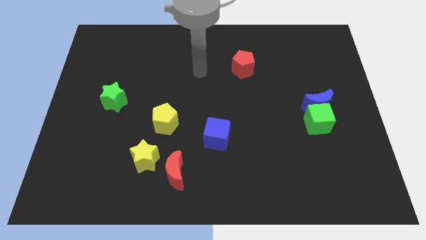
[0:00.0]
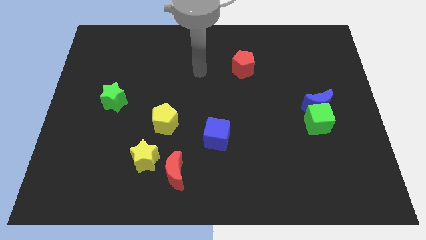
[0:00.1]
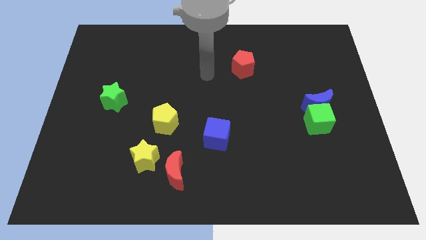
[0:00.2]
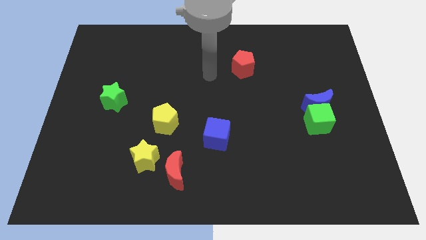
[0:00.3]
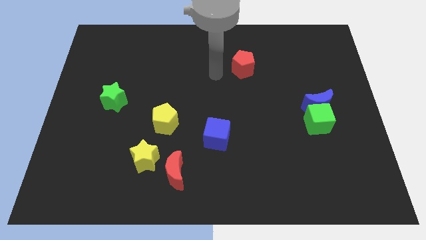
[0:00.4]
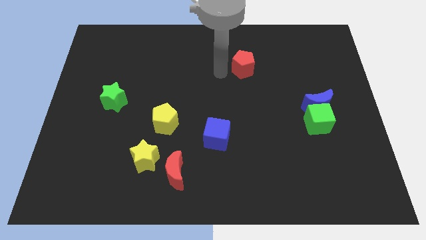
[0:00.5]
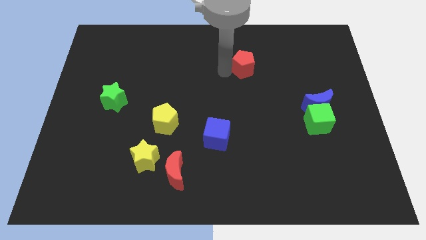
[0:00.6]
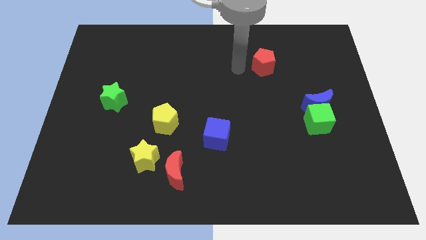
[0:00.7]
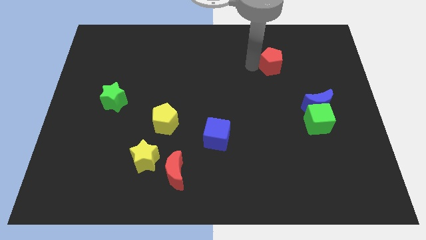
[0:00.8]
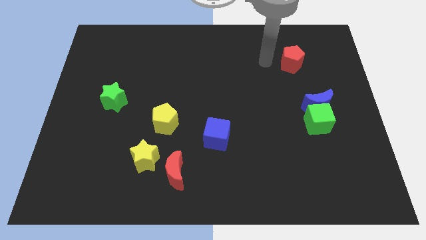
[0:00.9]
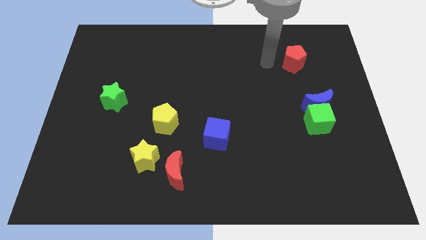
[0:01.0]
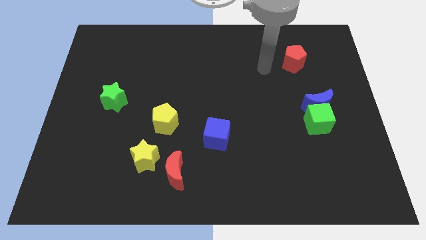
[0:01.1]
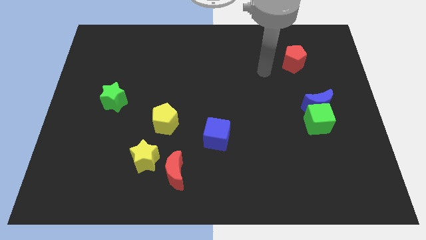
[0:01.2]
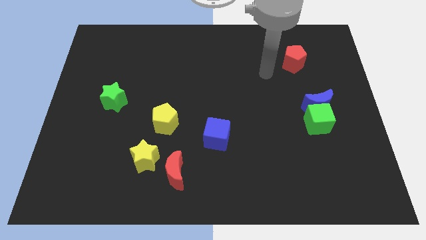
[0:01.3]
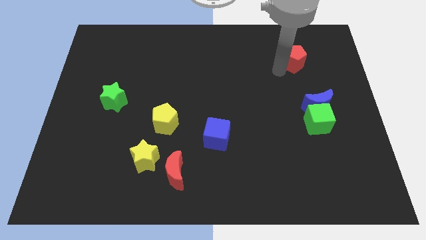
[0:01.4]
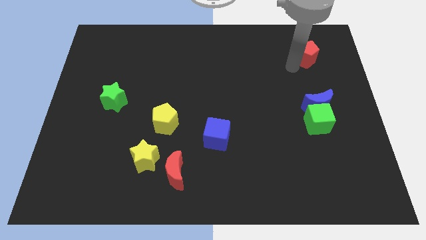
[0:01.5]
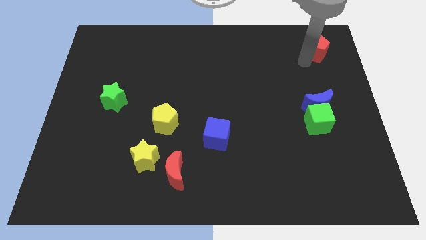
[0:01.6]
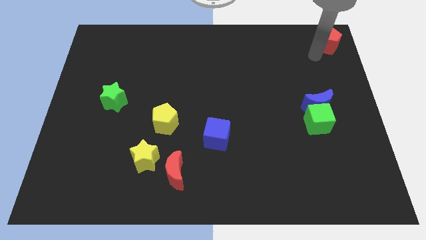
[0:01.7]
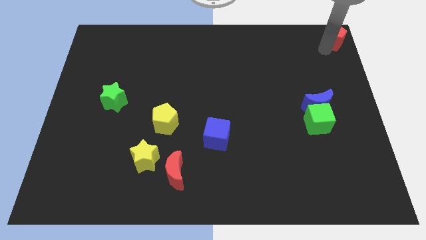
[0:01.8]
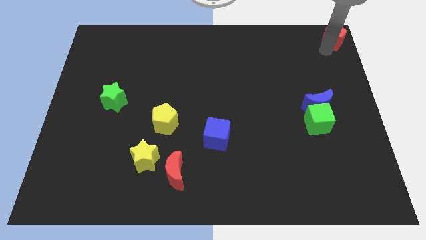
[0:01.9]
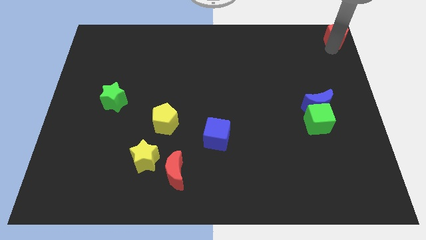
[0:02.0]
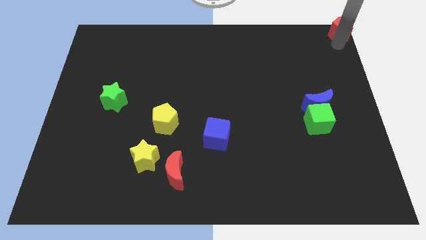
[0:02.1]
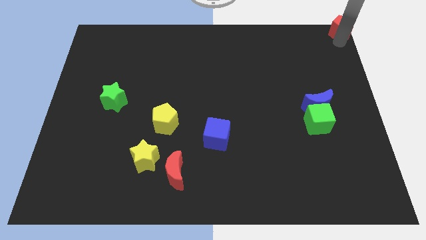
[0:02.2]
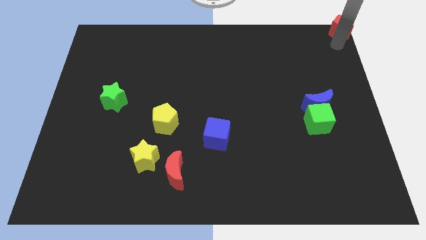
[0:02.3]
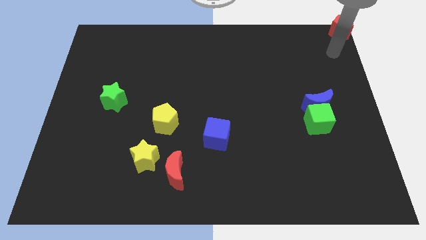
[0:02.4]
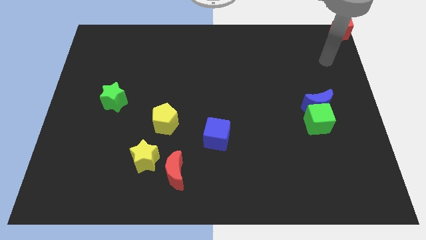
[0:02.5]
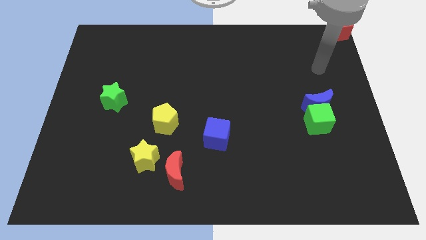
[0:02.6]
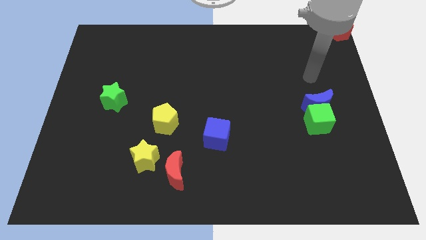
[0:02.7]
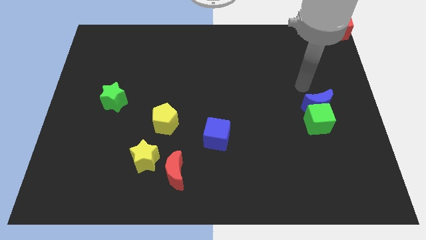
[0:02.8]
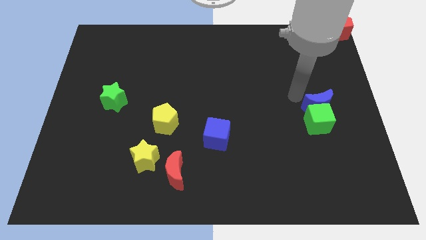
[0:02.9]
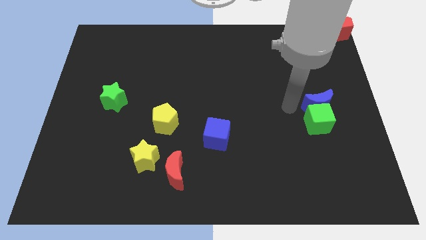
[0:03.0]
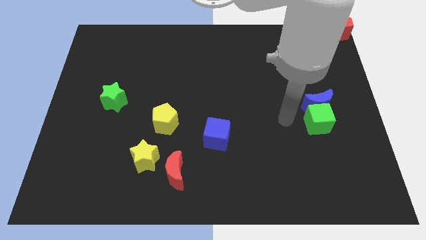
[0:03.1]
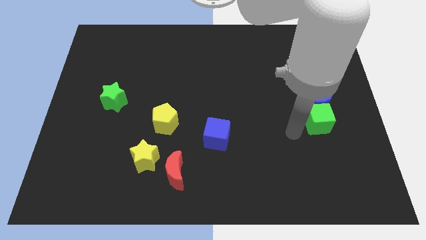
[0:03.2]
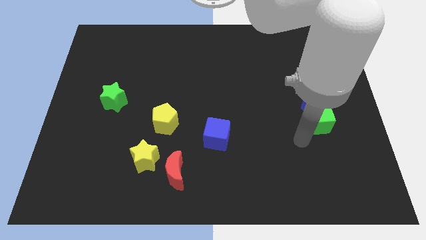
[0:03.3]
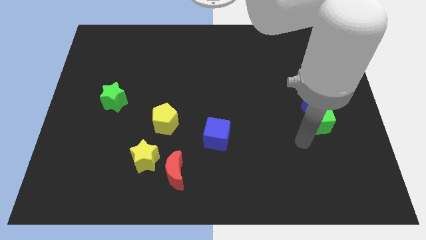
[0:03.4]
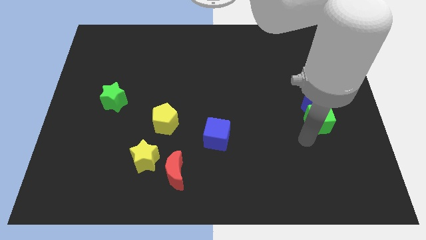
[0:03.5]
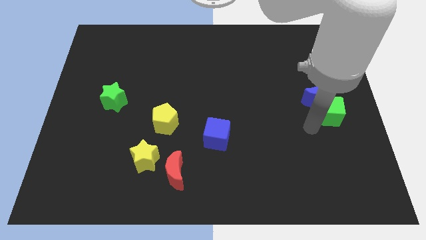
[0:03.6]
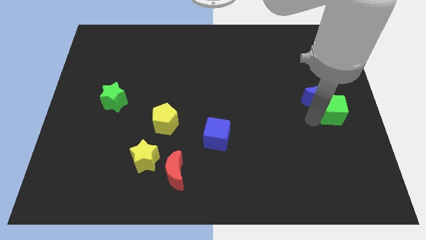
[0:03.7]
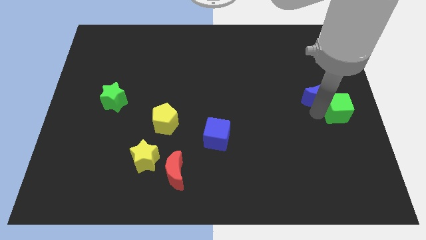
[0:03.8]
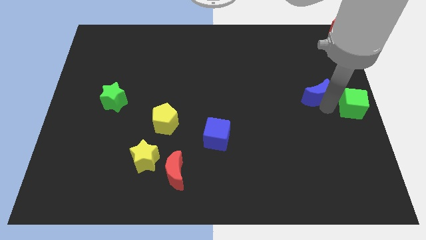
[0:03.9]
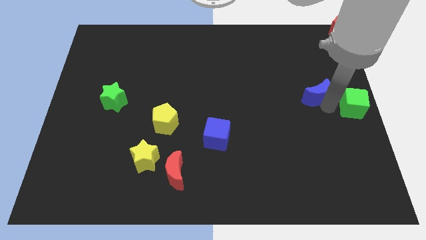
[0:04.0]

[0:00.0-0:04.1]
move the red pentagon to the top right of the board

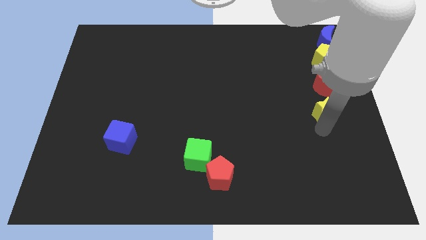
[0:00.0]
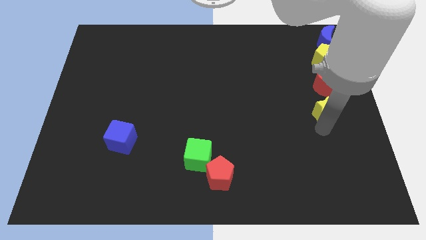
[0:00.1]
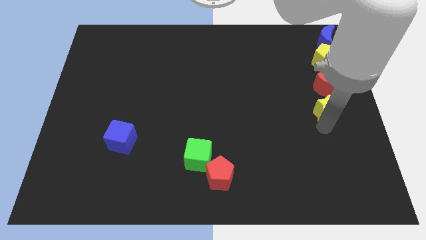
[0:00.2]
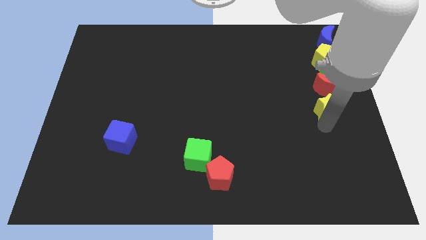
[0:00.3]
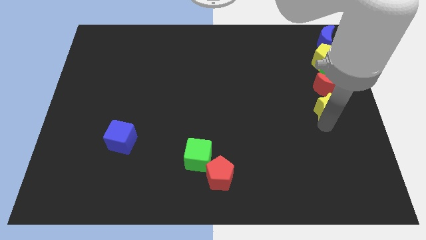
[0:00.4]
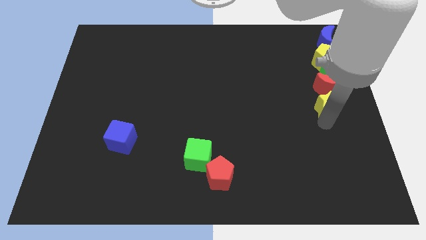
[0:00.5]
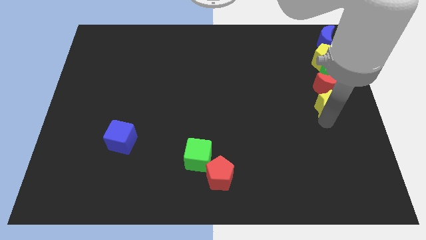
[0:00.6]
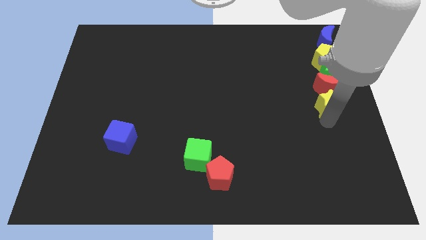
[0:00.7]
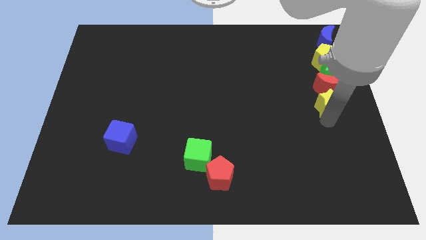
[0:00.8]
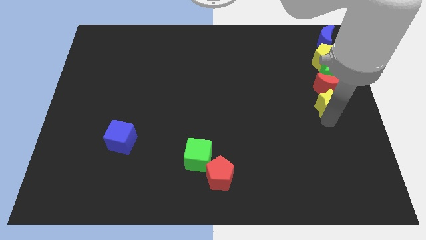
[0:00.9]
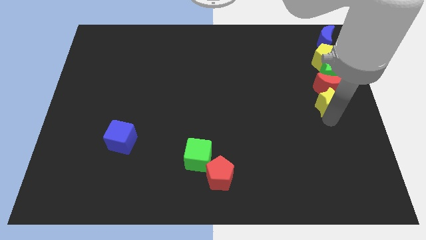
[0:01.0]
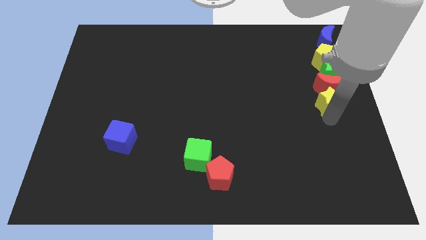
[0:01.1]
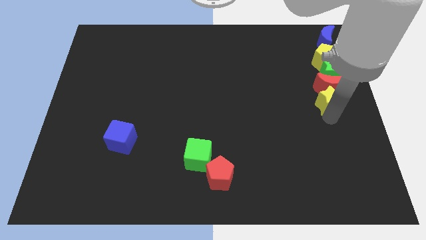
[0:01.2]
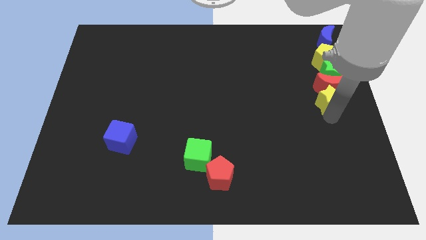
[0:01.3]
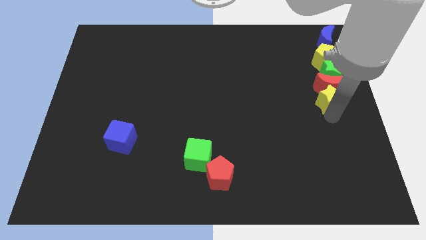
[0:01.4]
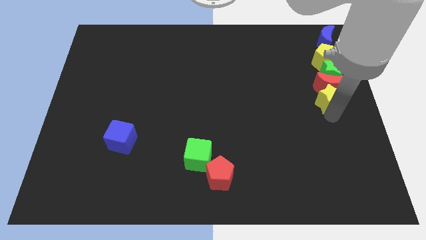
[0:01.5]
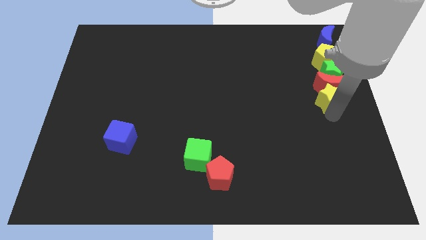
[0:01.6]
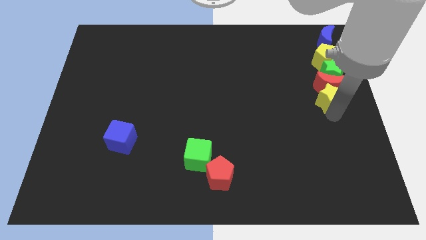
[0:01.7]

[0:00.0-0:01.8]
move the yellow star into red moon

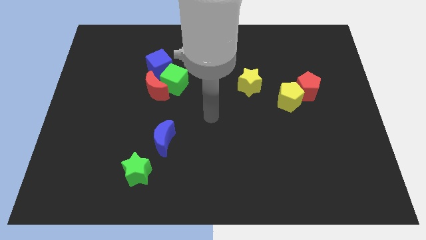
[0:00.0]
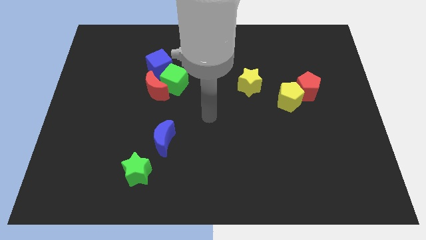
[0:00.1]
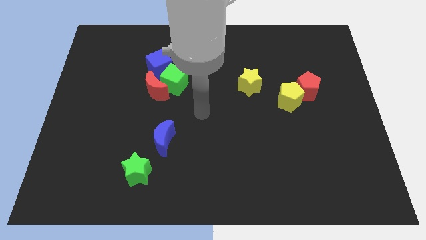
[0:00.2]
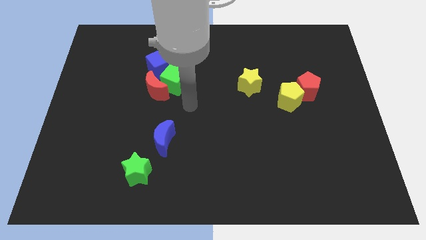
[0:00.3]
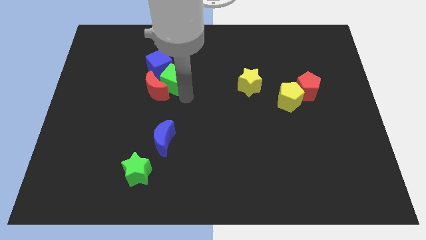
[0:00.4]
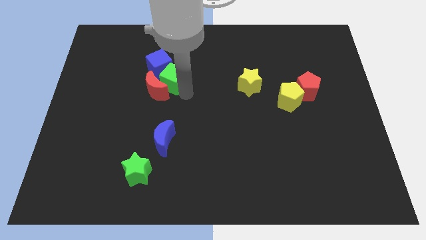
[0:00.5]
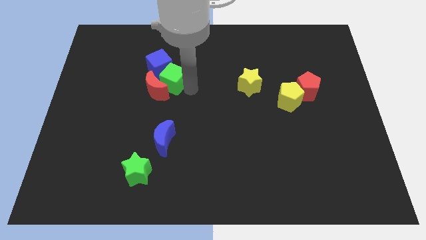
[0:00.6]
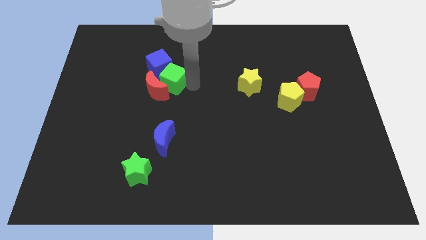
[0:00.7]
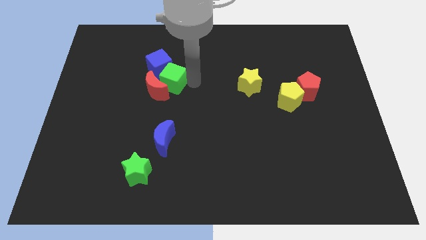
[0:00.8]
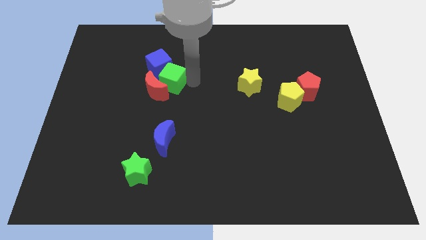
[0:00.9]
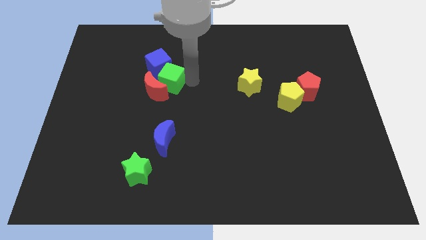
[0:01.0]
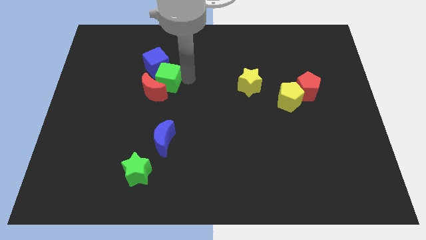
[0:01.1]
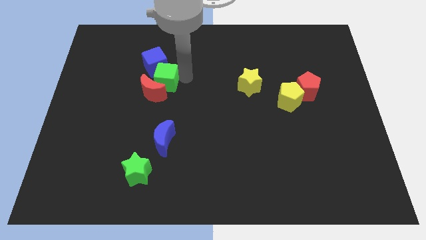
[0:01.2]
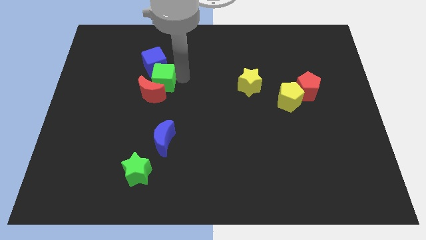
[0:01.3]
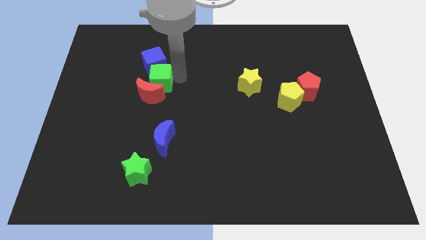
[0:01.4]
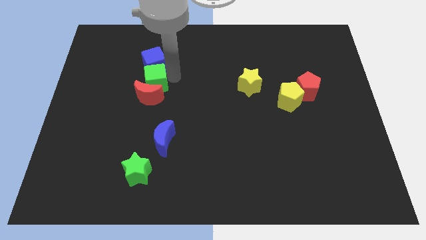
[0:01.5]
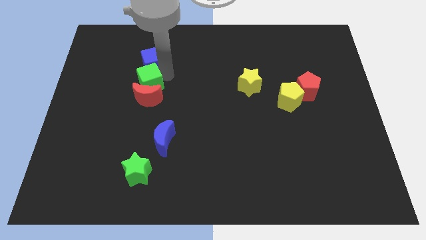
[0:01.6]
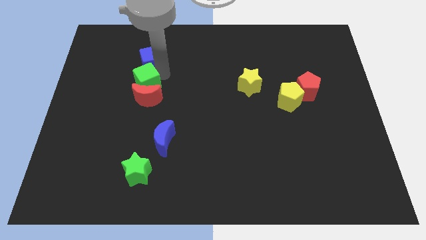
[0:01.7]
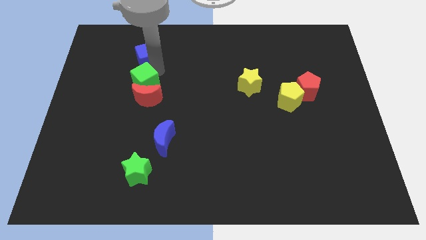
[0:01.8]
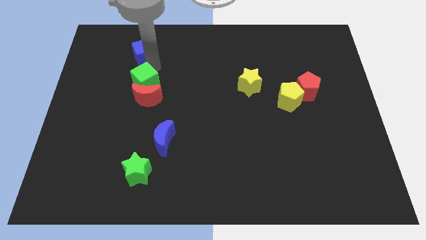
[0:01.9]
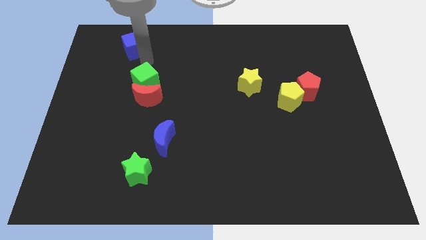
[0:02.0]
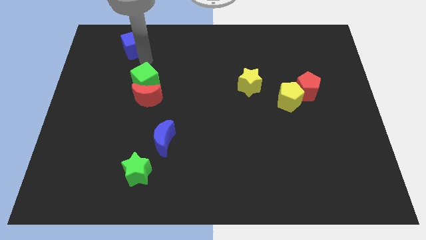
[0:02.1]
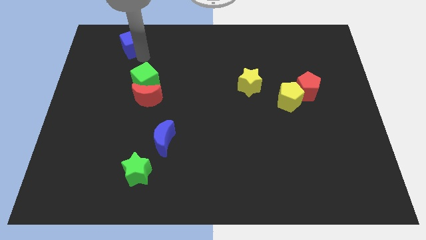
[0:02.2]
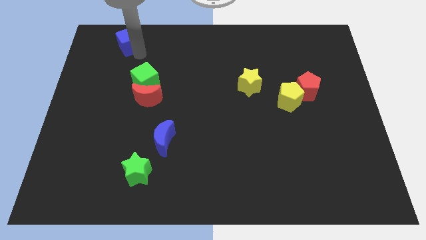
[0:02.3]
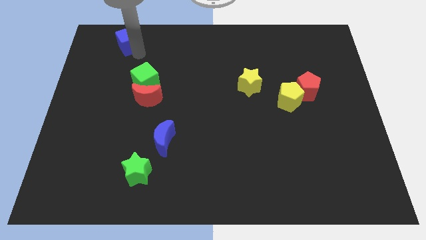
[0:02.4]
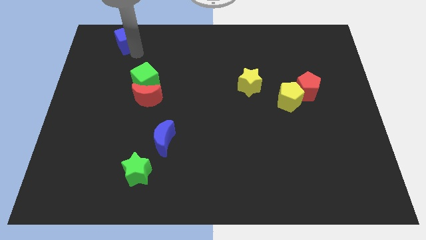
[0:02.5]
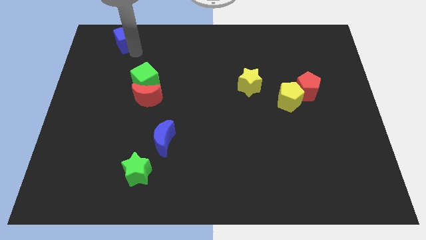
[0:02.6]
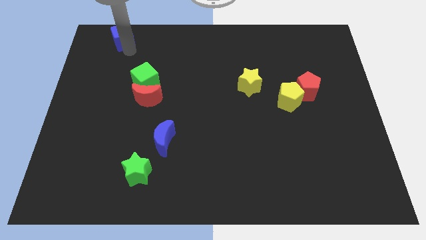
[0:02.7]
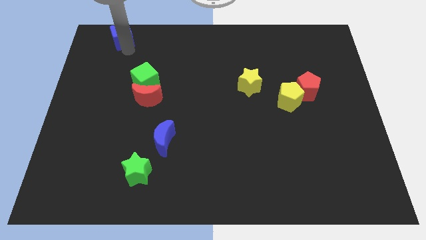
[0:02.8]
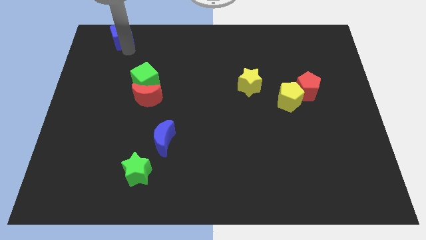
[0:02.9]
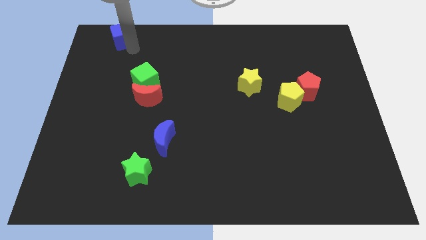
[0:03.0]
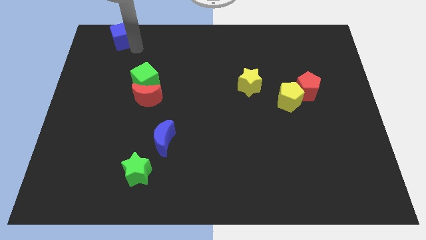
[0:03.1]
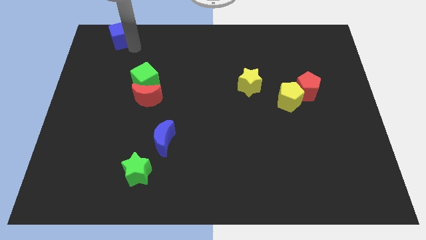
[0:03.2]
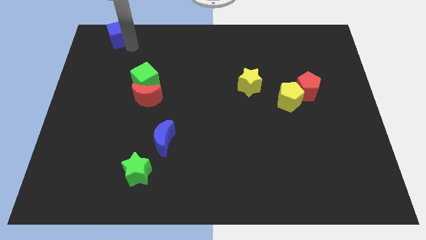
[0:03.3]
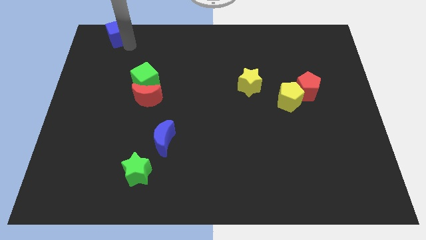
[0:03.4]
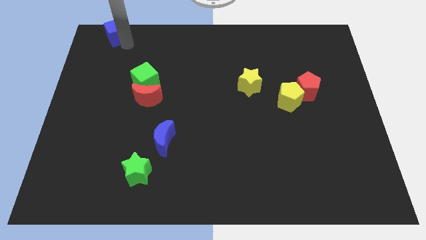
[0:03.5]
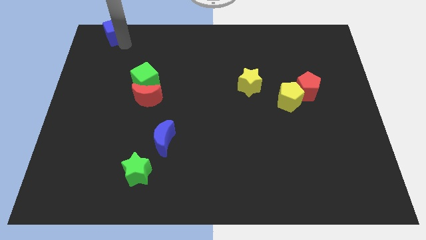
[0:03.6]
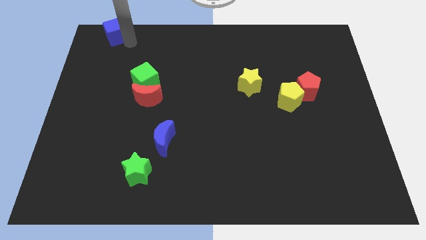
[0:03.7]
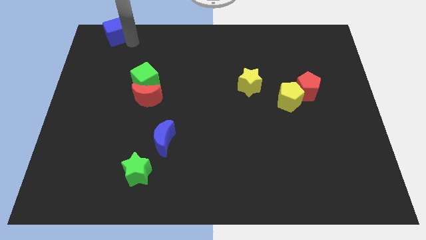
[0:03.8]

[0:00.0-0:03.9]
push the blue cube to the top left of the green cube
